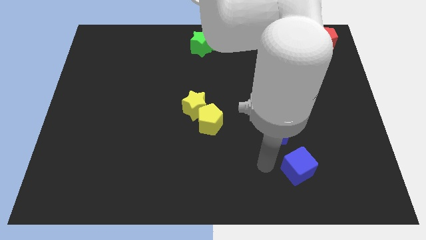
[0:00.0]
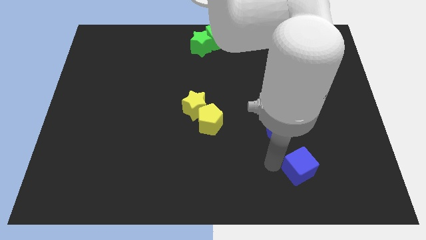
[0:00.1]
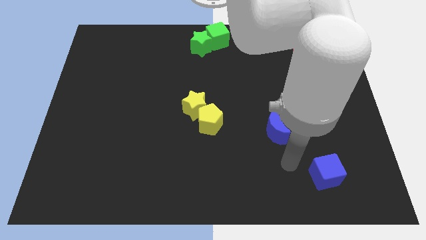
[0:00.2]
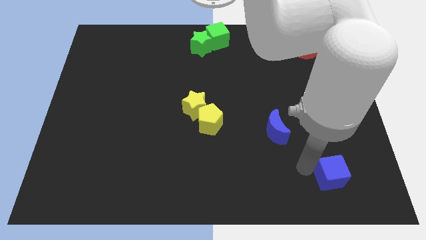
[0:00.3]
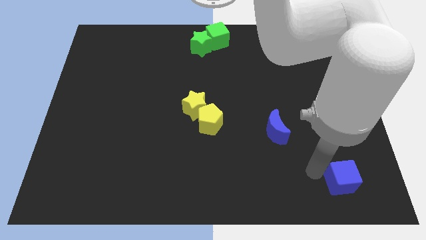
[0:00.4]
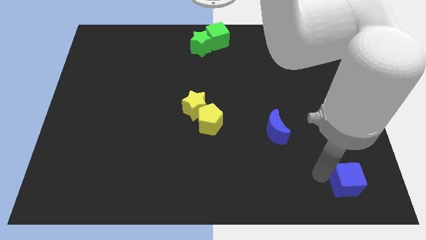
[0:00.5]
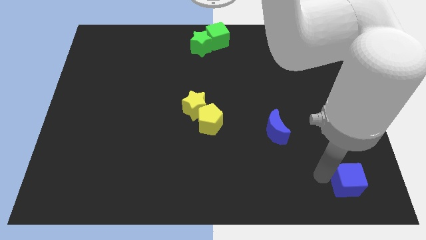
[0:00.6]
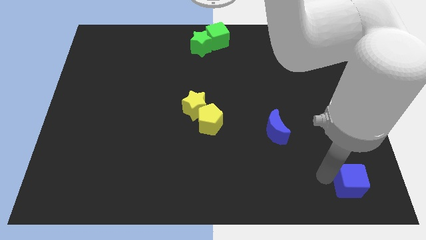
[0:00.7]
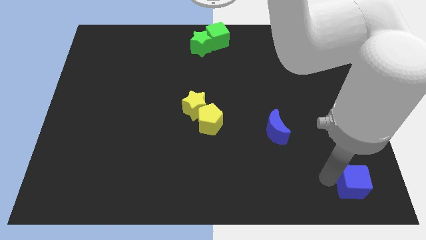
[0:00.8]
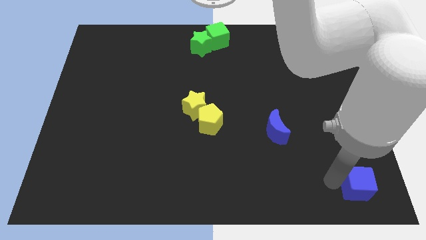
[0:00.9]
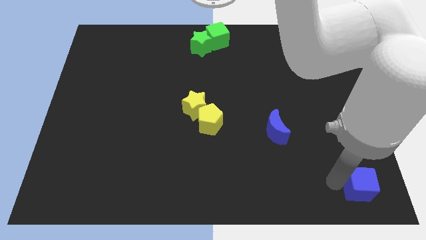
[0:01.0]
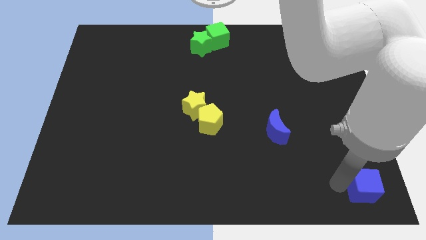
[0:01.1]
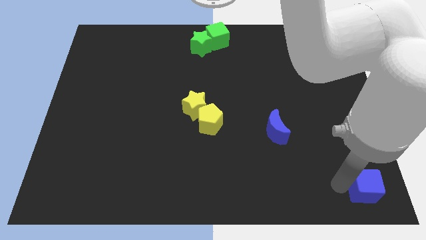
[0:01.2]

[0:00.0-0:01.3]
push the blue cube to the right corner of thee board

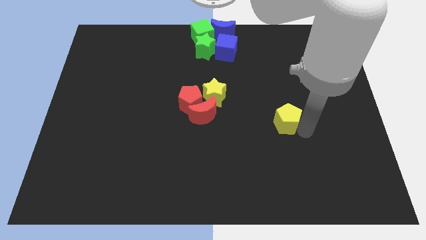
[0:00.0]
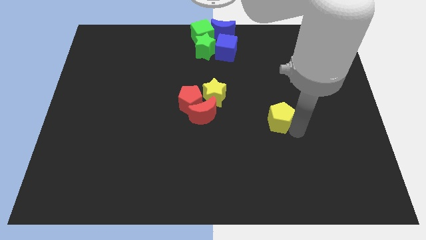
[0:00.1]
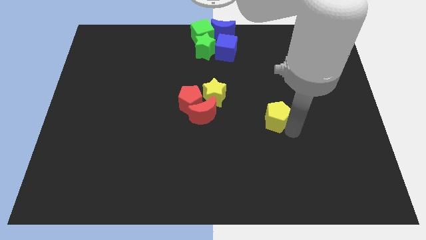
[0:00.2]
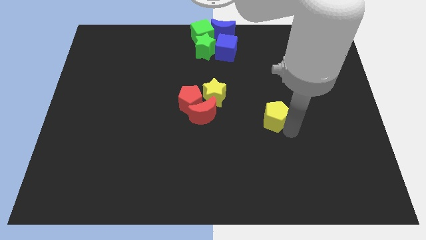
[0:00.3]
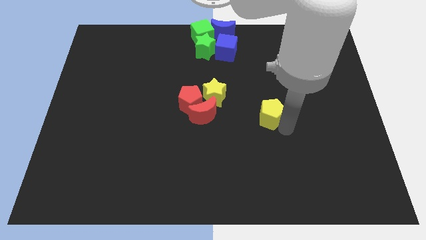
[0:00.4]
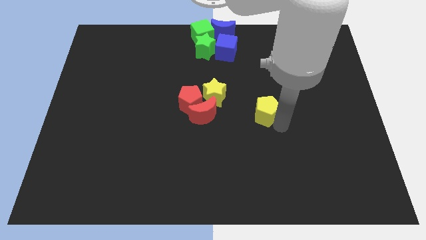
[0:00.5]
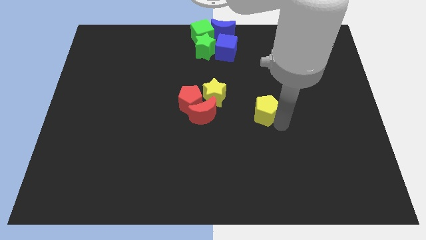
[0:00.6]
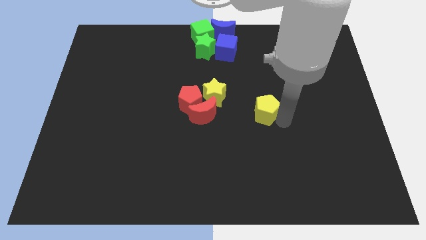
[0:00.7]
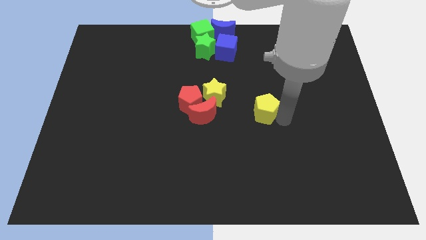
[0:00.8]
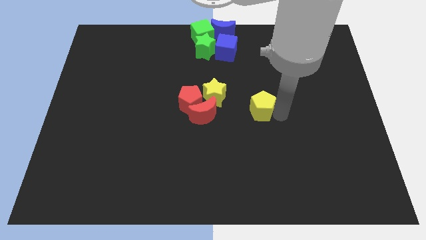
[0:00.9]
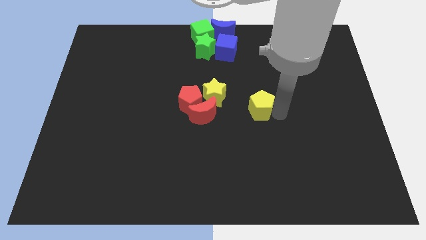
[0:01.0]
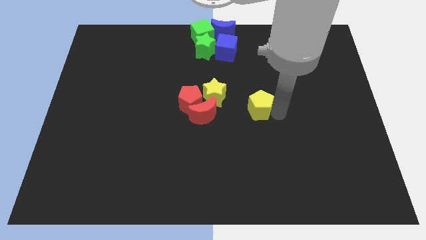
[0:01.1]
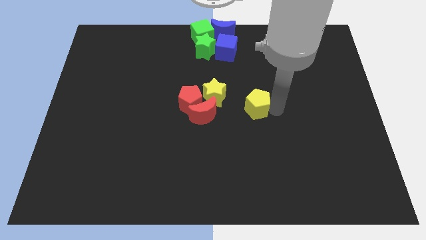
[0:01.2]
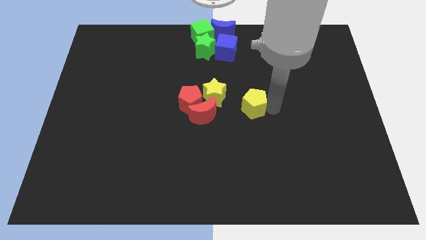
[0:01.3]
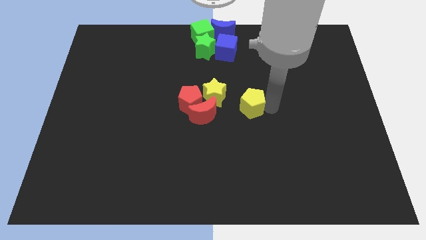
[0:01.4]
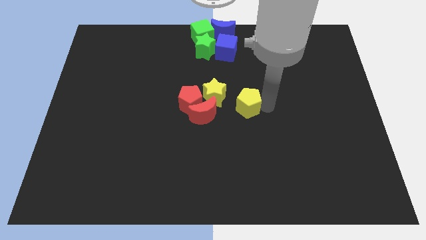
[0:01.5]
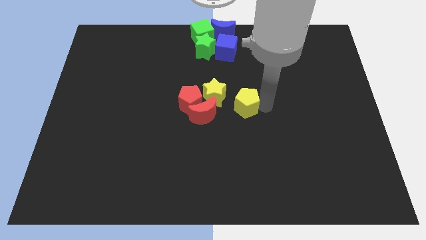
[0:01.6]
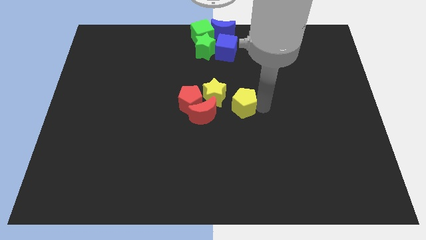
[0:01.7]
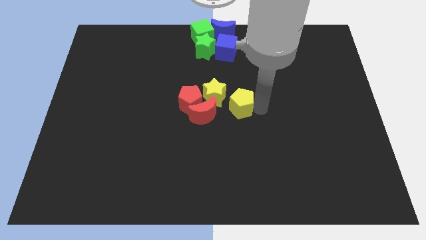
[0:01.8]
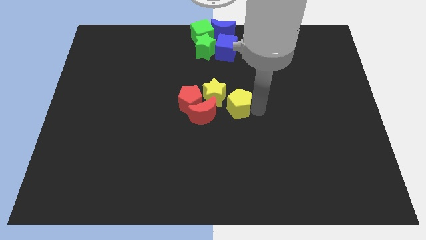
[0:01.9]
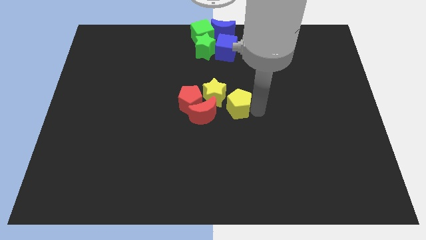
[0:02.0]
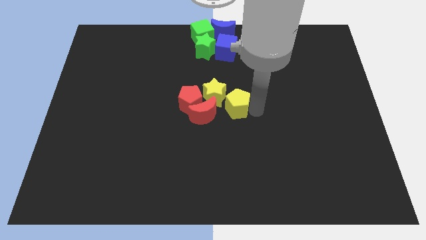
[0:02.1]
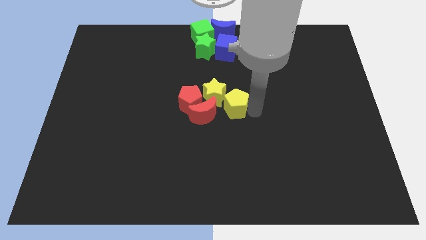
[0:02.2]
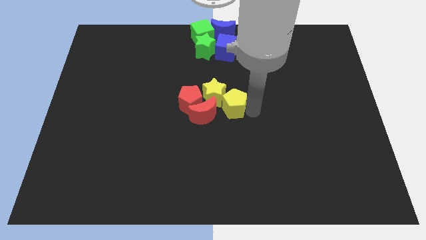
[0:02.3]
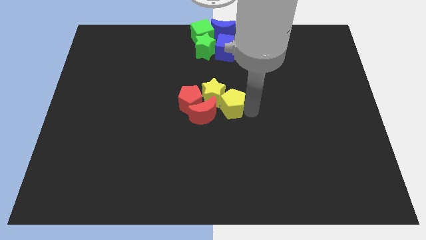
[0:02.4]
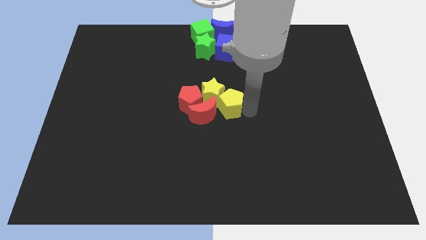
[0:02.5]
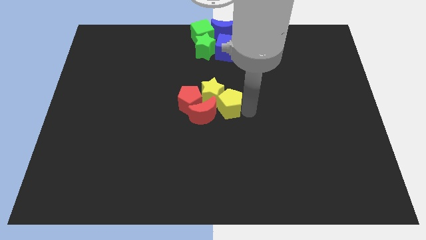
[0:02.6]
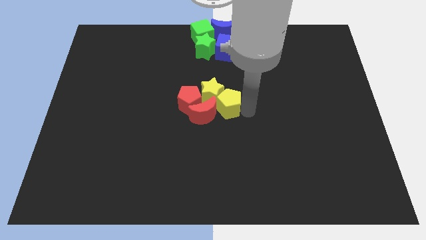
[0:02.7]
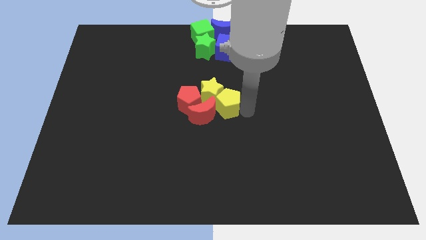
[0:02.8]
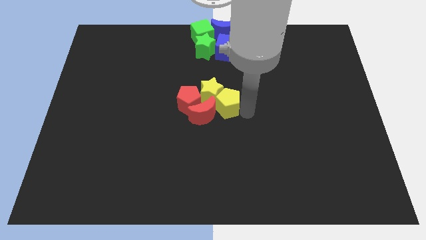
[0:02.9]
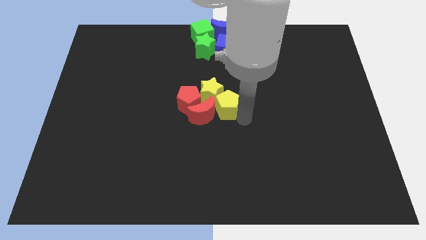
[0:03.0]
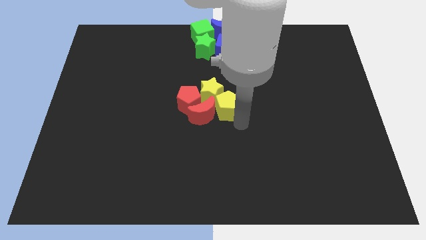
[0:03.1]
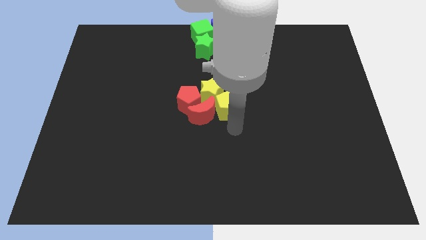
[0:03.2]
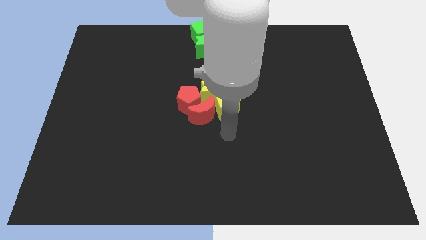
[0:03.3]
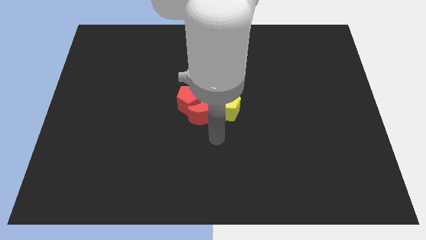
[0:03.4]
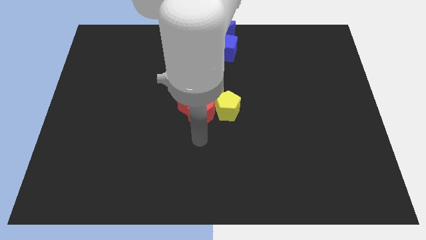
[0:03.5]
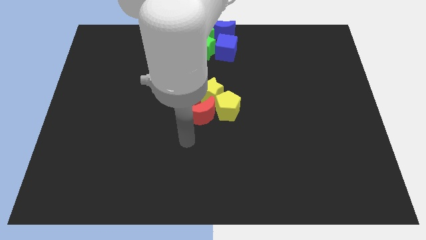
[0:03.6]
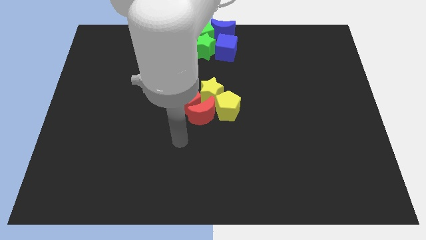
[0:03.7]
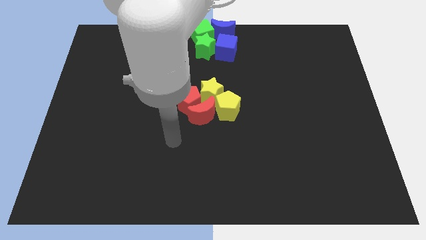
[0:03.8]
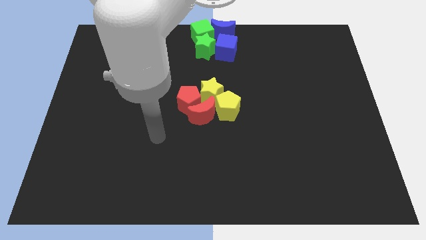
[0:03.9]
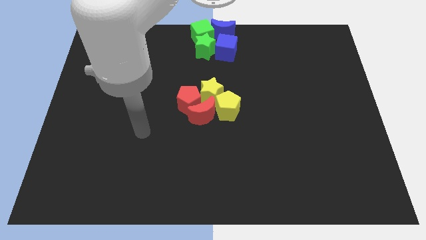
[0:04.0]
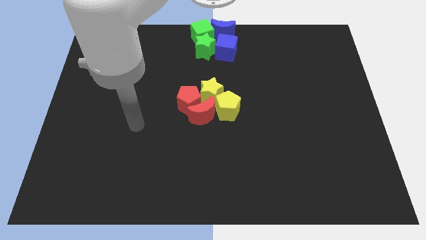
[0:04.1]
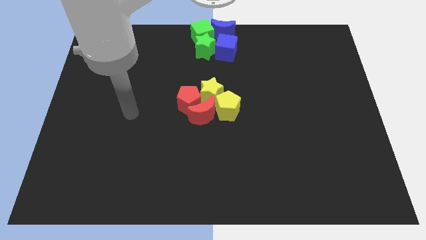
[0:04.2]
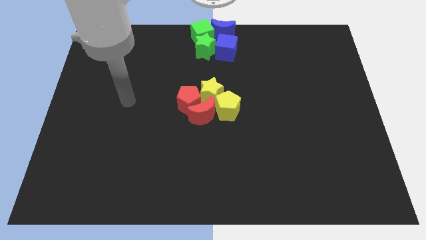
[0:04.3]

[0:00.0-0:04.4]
move the yellow pentagon to the right of the red crescent

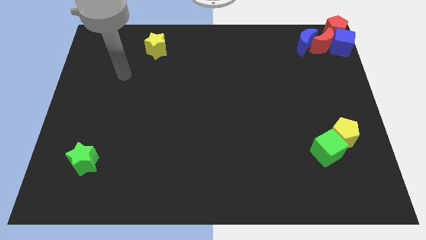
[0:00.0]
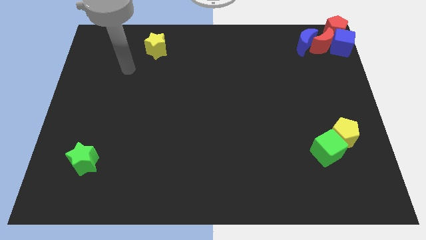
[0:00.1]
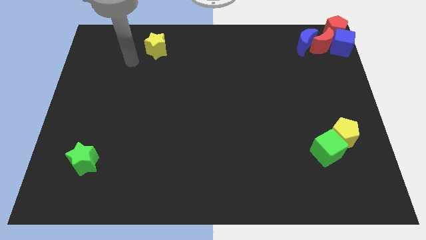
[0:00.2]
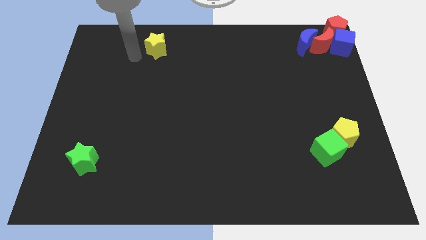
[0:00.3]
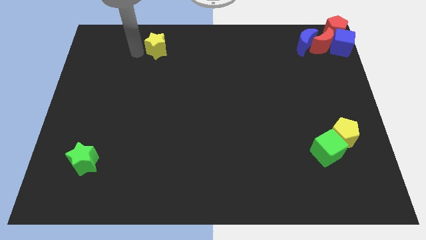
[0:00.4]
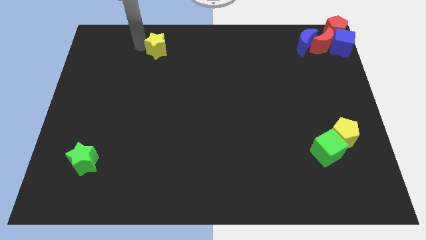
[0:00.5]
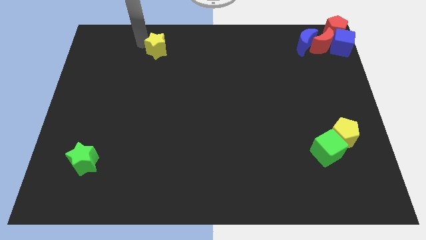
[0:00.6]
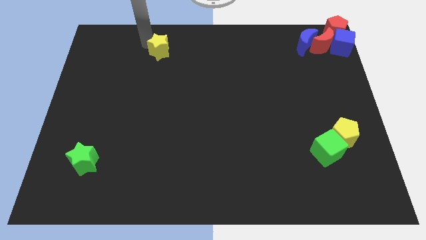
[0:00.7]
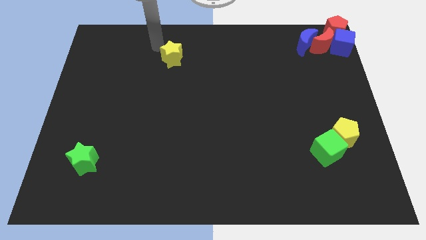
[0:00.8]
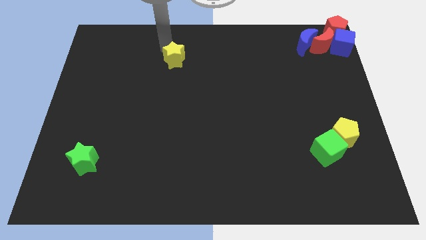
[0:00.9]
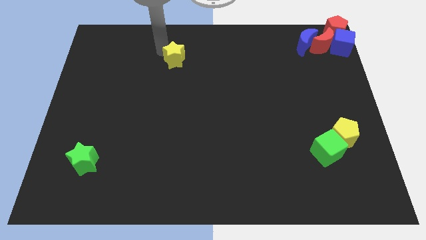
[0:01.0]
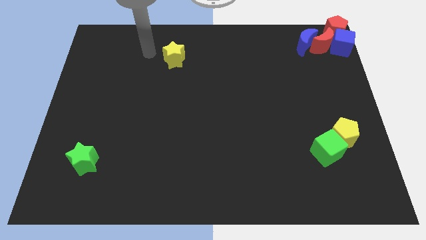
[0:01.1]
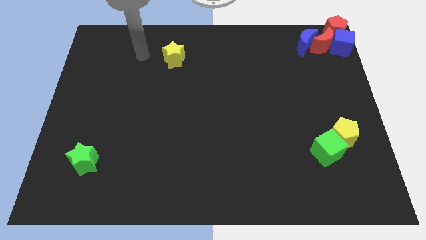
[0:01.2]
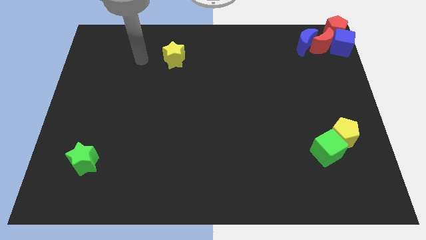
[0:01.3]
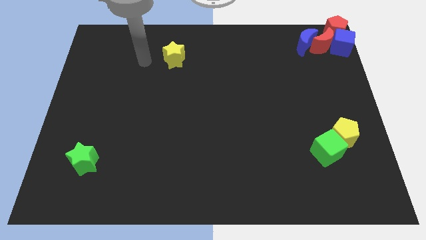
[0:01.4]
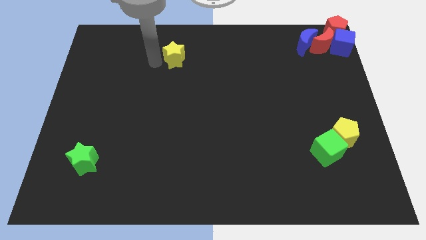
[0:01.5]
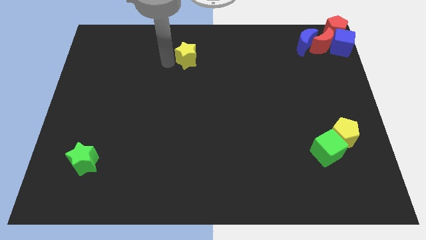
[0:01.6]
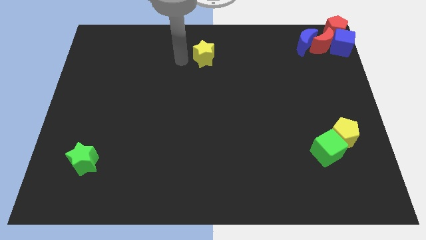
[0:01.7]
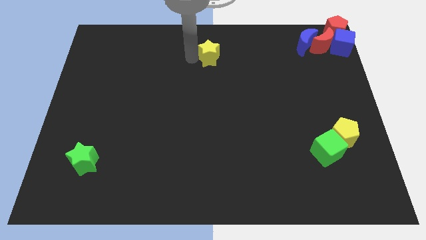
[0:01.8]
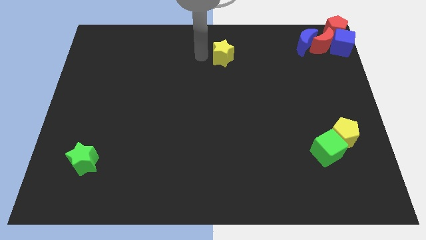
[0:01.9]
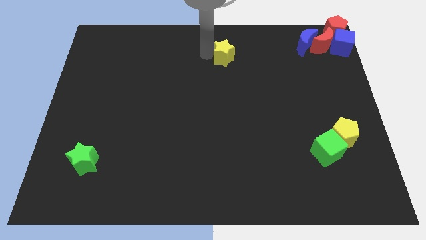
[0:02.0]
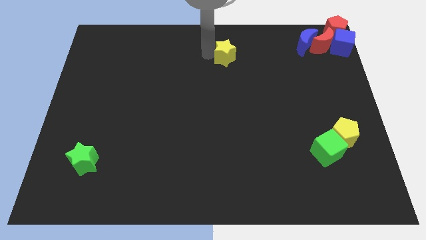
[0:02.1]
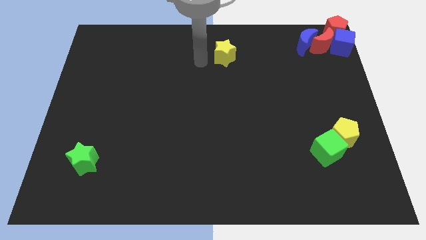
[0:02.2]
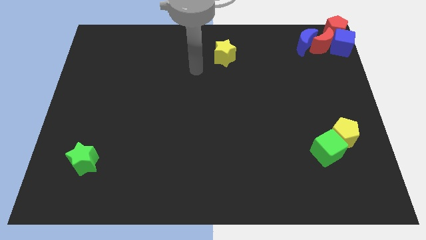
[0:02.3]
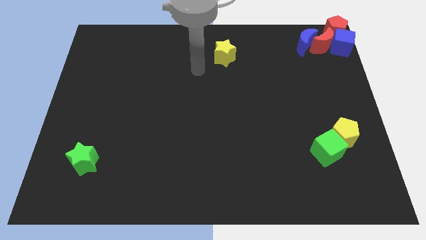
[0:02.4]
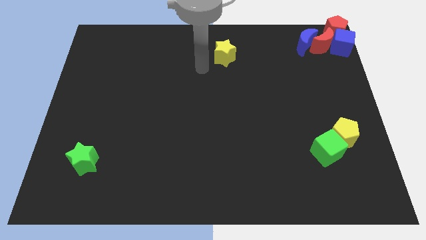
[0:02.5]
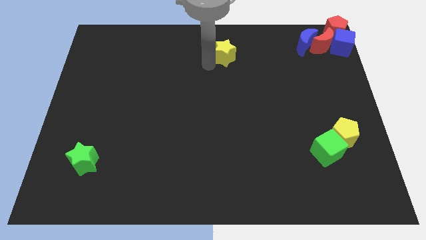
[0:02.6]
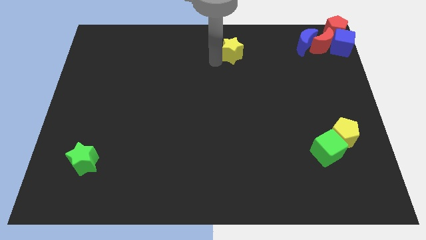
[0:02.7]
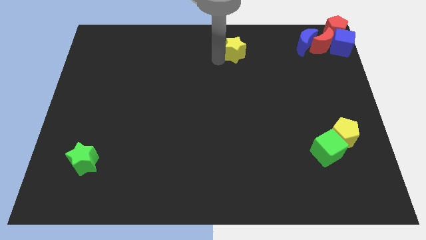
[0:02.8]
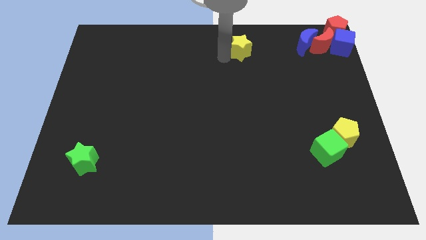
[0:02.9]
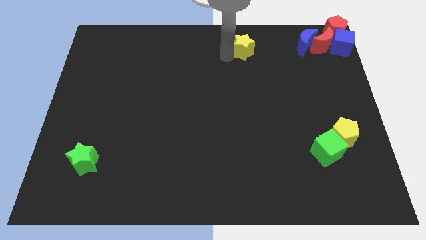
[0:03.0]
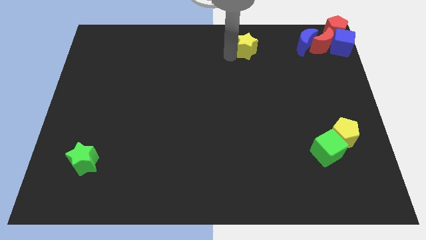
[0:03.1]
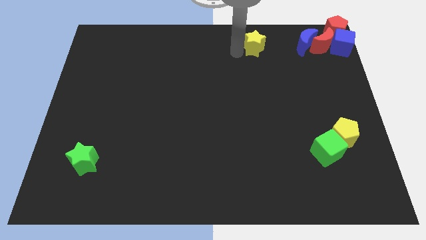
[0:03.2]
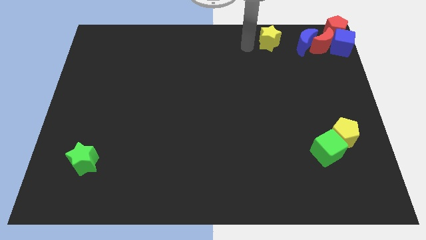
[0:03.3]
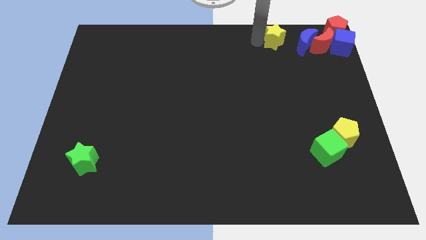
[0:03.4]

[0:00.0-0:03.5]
place the yellow star left to the blue crescent
